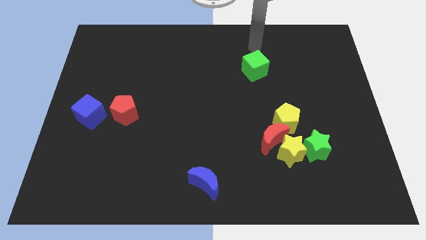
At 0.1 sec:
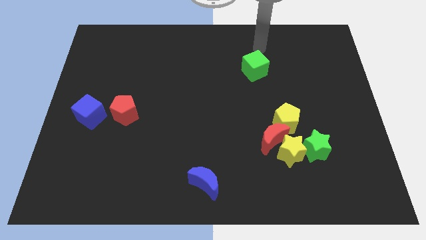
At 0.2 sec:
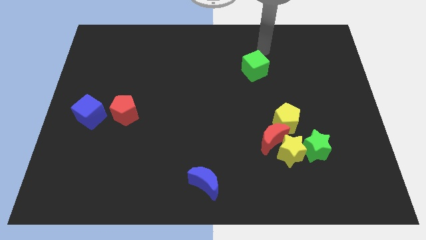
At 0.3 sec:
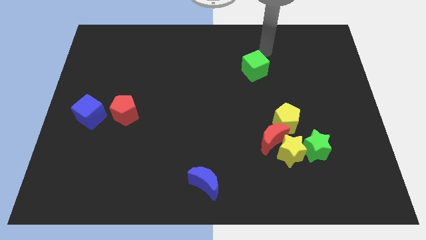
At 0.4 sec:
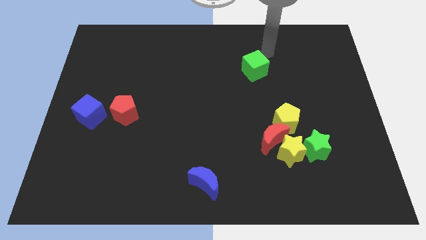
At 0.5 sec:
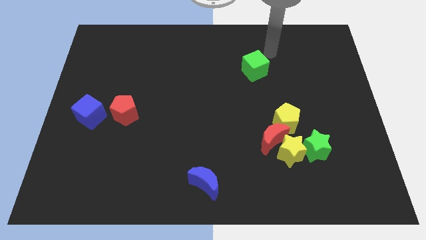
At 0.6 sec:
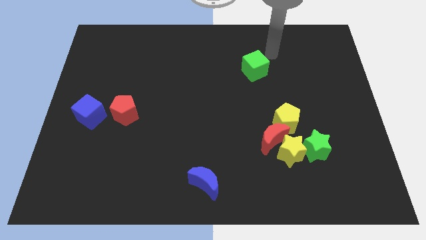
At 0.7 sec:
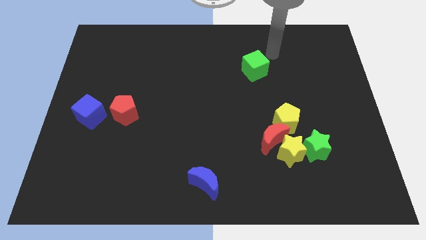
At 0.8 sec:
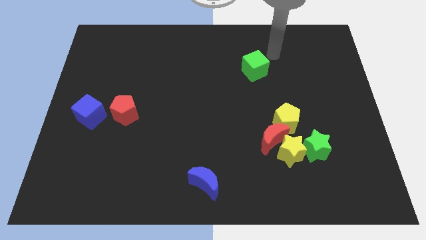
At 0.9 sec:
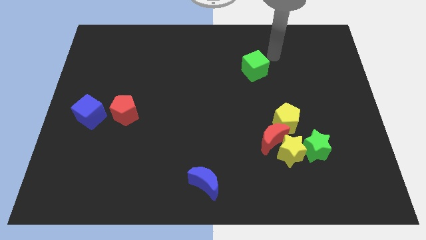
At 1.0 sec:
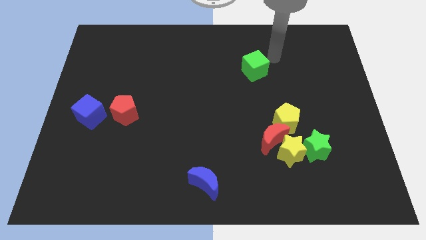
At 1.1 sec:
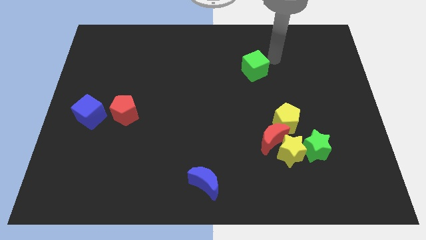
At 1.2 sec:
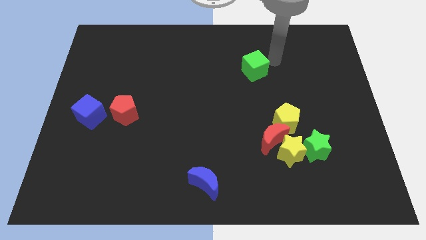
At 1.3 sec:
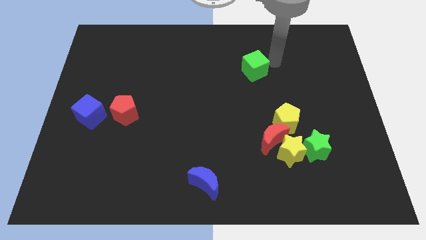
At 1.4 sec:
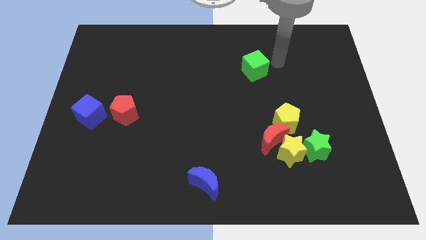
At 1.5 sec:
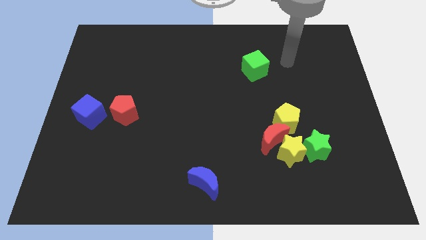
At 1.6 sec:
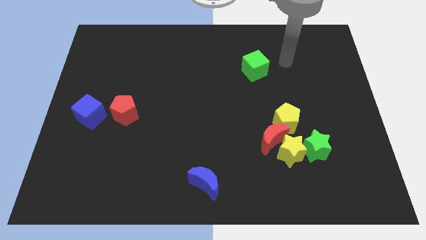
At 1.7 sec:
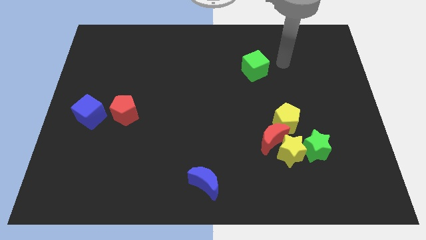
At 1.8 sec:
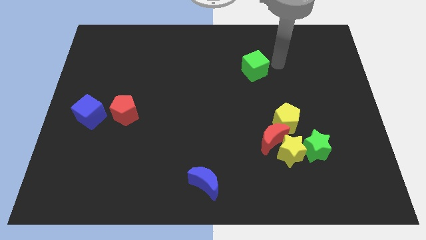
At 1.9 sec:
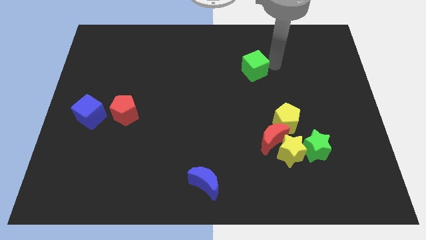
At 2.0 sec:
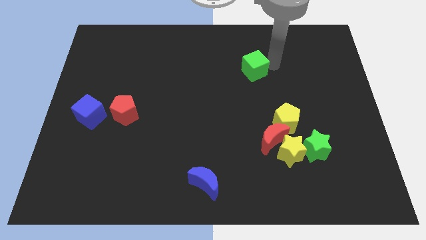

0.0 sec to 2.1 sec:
move your arm towards the green cube

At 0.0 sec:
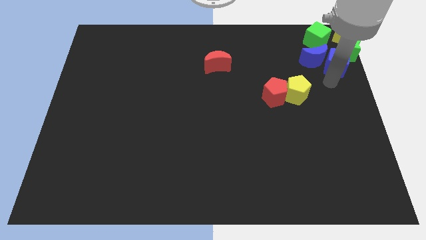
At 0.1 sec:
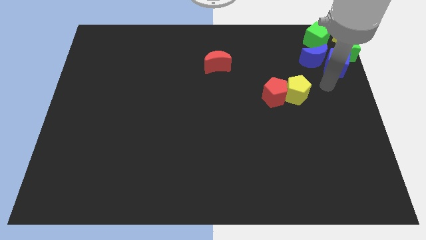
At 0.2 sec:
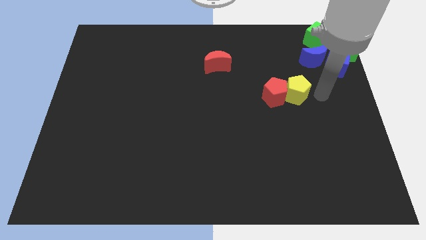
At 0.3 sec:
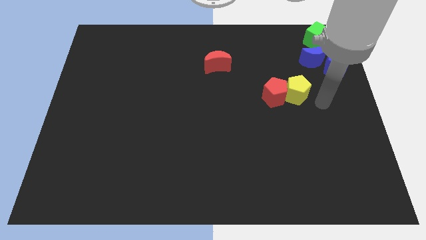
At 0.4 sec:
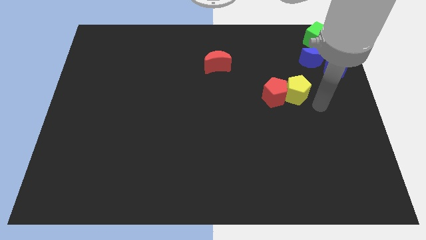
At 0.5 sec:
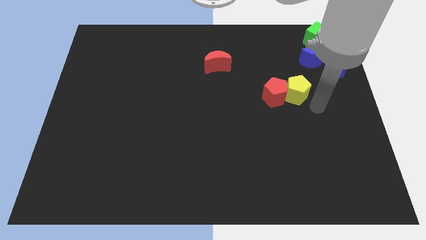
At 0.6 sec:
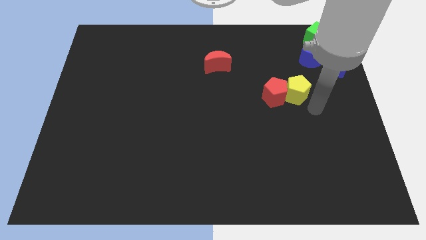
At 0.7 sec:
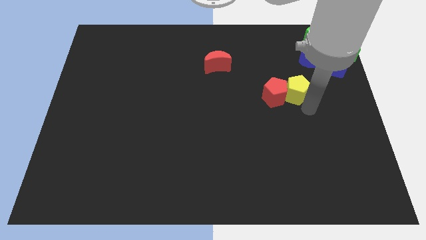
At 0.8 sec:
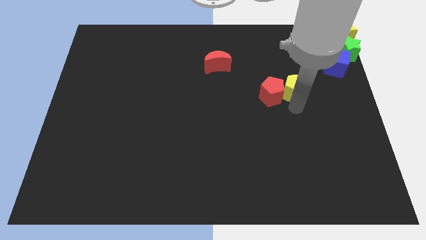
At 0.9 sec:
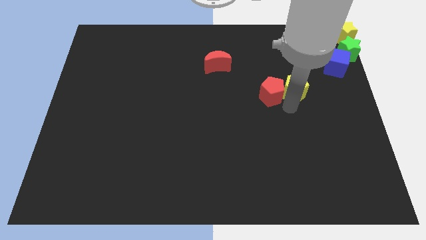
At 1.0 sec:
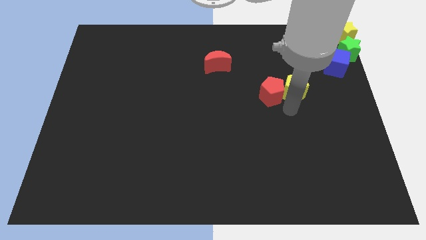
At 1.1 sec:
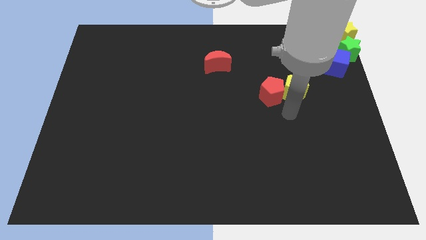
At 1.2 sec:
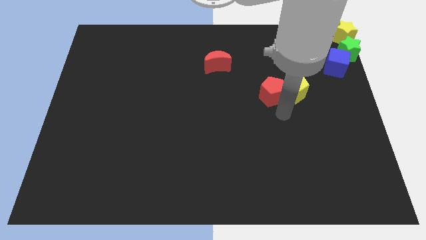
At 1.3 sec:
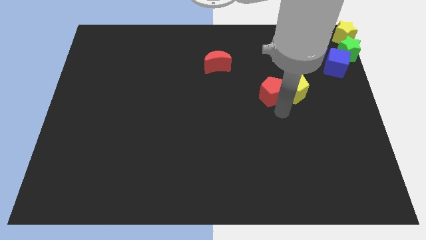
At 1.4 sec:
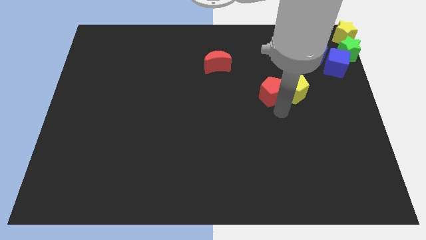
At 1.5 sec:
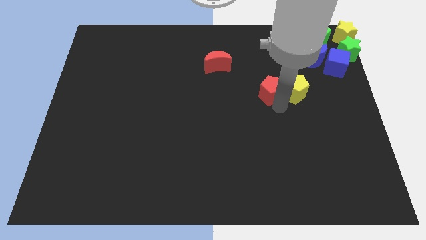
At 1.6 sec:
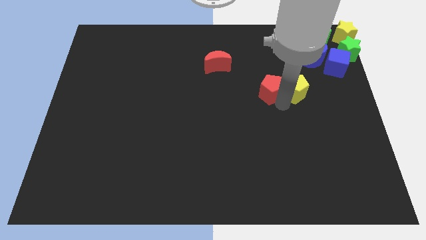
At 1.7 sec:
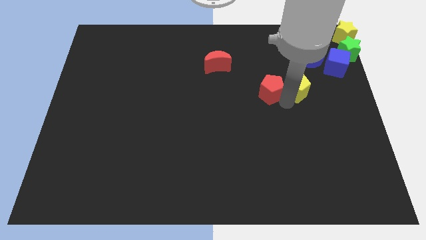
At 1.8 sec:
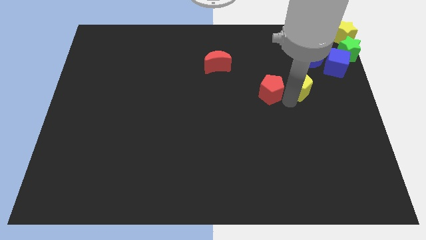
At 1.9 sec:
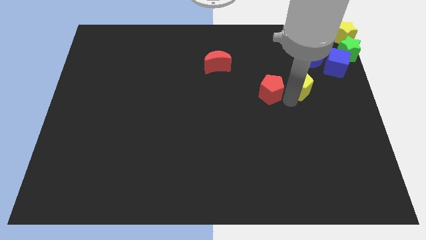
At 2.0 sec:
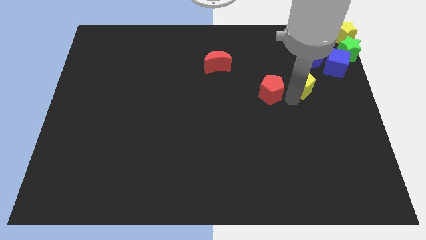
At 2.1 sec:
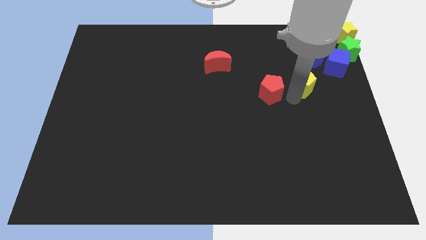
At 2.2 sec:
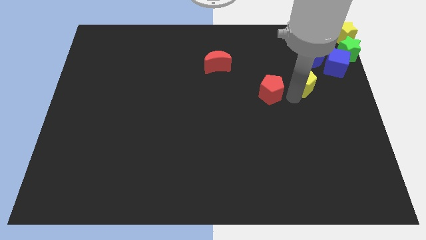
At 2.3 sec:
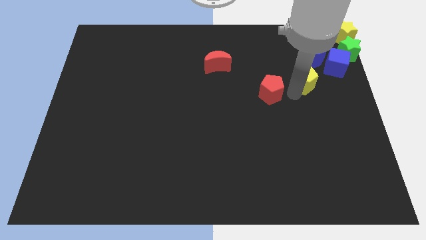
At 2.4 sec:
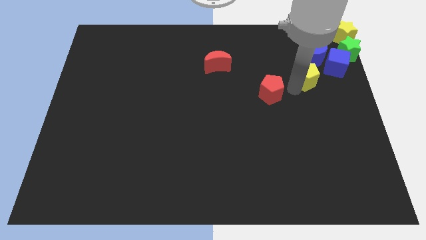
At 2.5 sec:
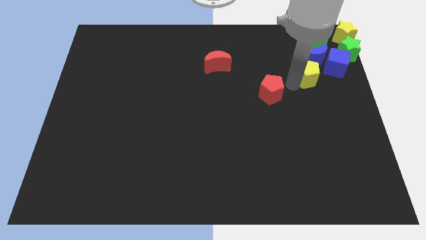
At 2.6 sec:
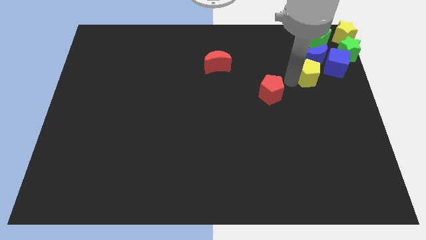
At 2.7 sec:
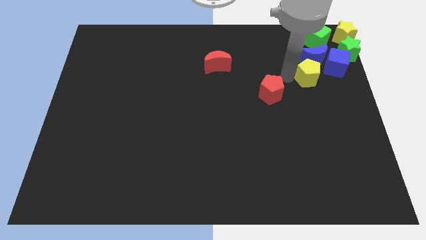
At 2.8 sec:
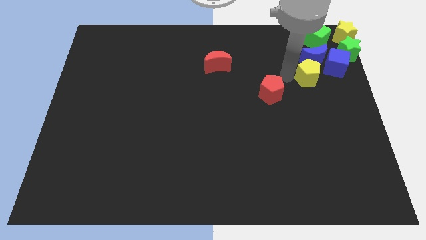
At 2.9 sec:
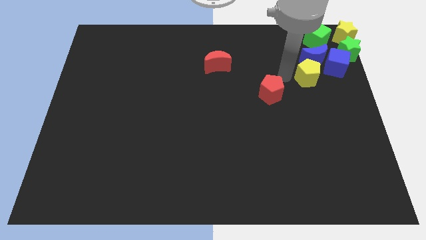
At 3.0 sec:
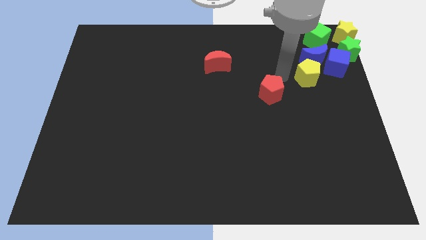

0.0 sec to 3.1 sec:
push yellow pentagon towards the blue crescent

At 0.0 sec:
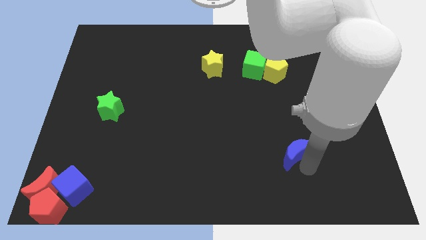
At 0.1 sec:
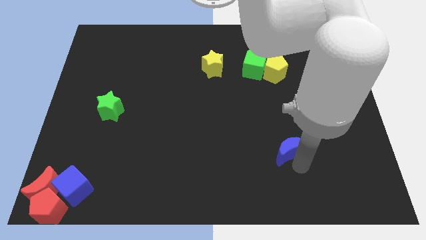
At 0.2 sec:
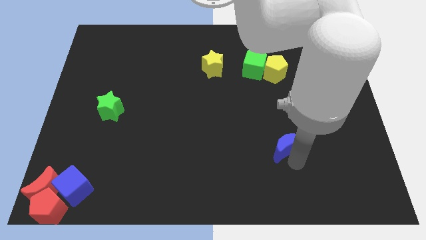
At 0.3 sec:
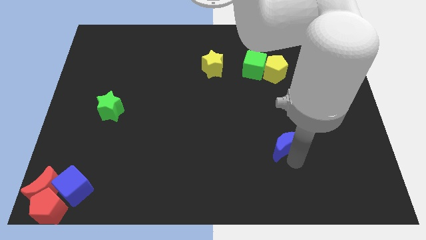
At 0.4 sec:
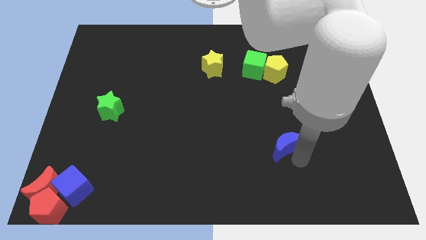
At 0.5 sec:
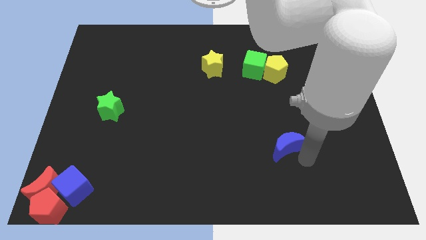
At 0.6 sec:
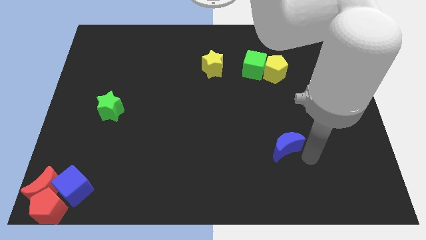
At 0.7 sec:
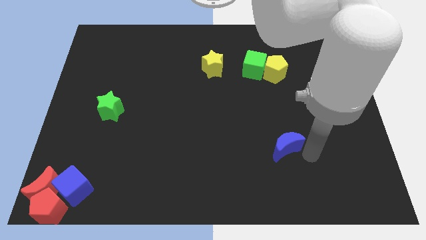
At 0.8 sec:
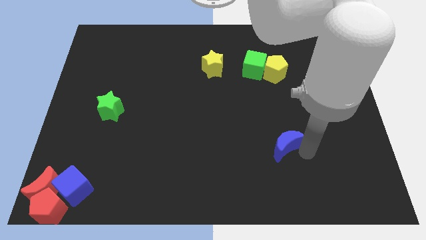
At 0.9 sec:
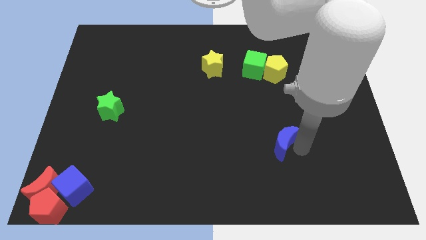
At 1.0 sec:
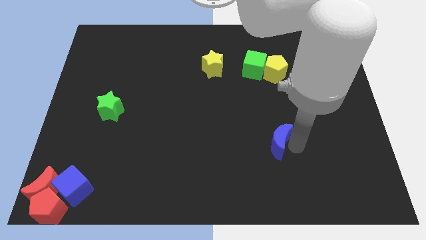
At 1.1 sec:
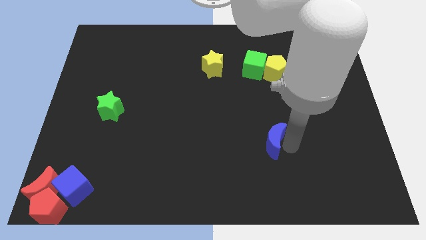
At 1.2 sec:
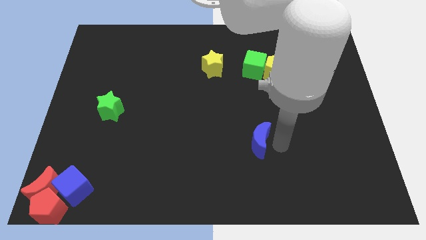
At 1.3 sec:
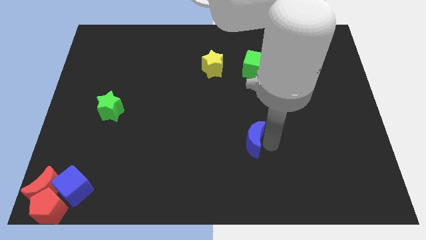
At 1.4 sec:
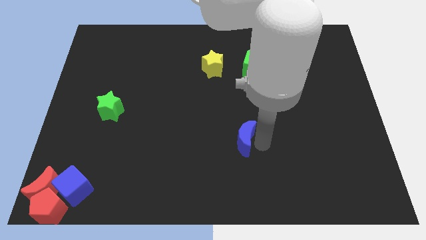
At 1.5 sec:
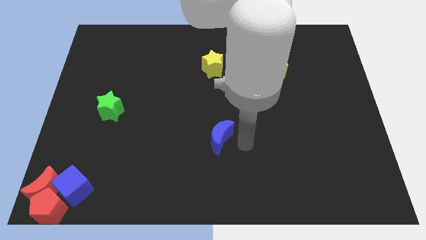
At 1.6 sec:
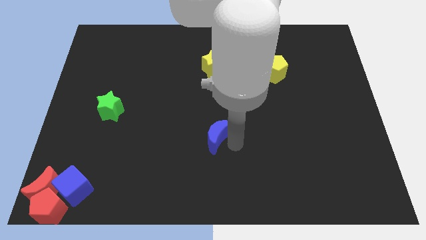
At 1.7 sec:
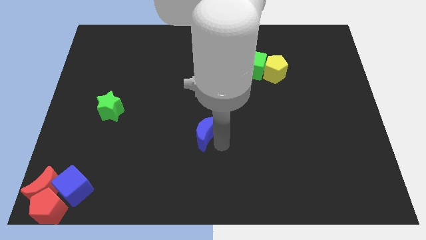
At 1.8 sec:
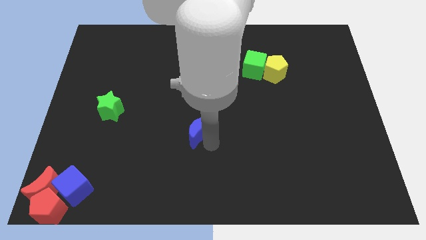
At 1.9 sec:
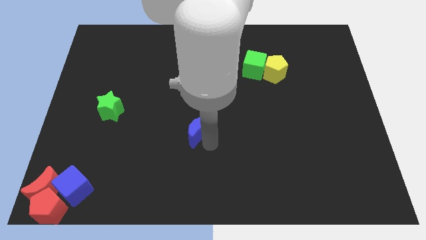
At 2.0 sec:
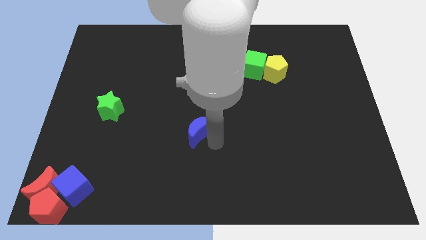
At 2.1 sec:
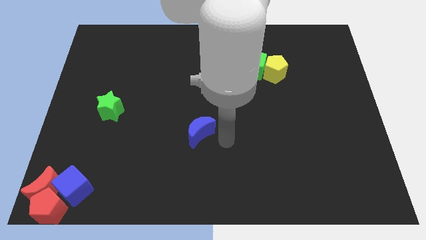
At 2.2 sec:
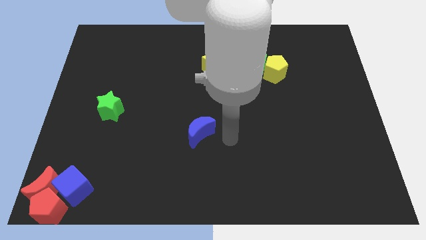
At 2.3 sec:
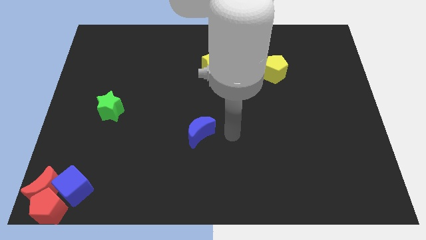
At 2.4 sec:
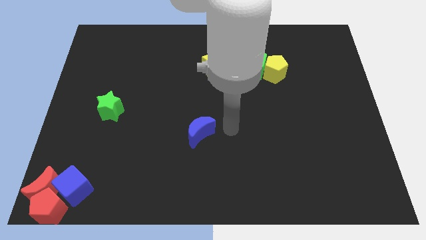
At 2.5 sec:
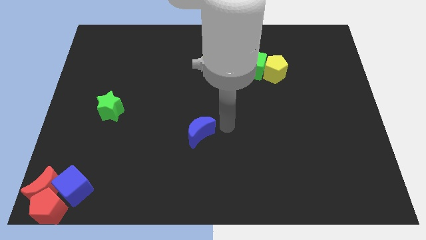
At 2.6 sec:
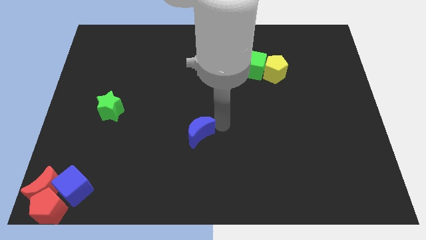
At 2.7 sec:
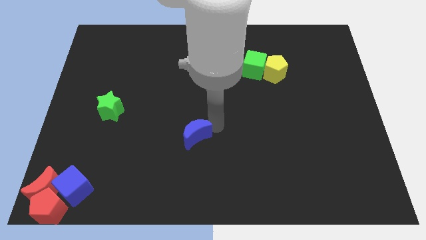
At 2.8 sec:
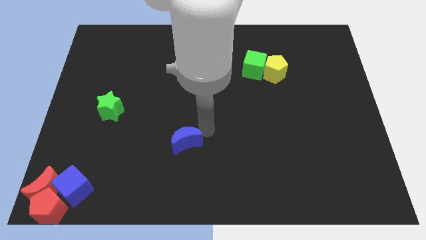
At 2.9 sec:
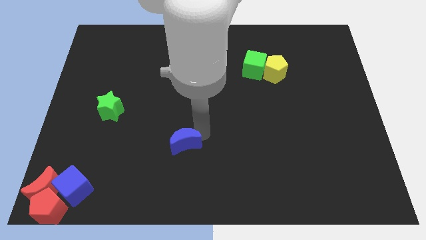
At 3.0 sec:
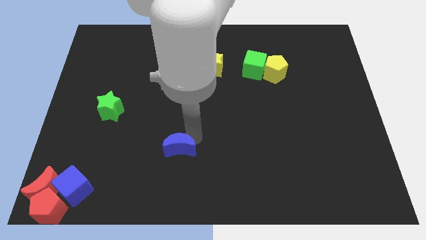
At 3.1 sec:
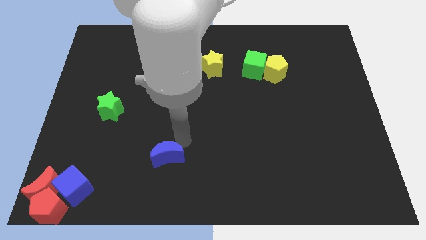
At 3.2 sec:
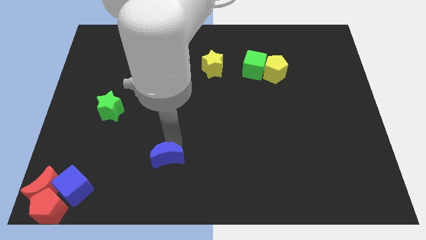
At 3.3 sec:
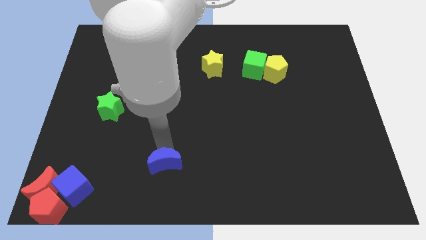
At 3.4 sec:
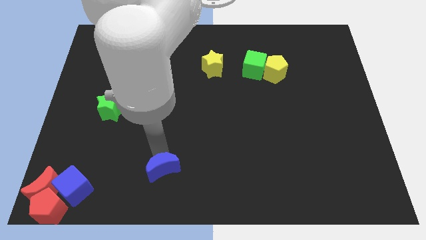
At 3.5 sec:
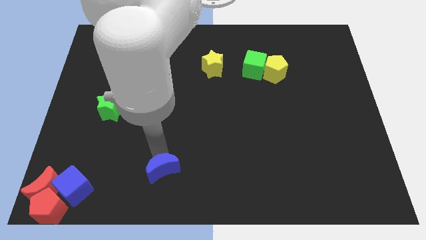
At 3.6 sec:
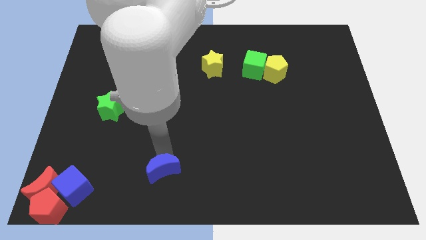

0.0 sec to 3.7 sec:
move the blue moon to the bottom diagonal to blue cube

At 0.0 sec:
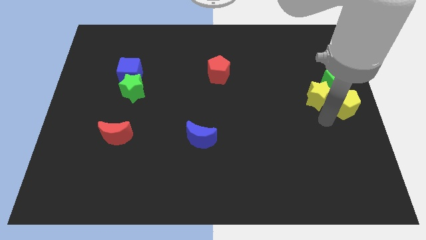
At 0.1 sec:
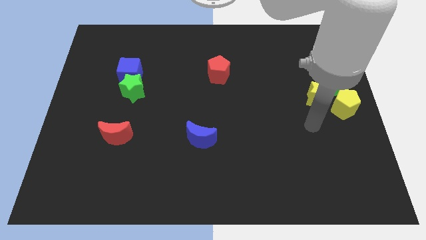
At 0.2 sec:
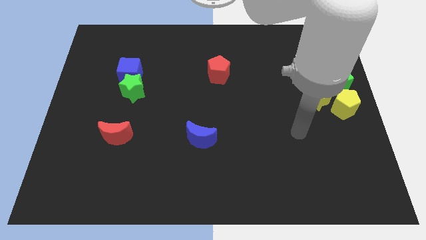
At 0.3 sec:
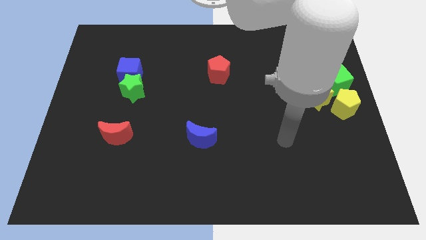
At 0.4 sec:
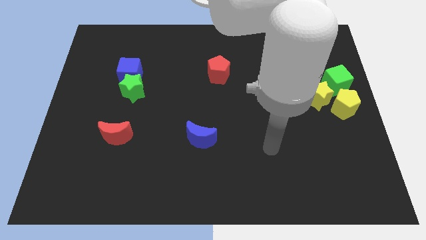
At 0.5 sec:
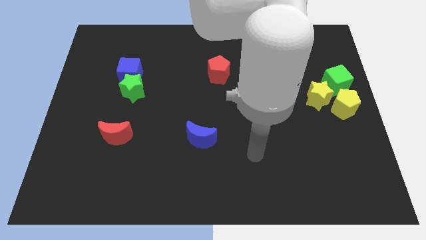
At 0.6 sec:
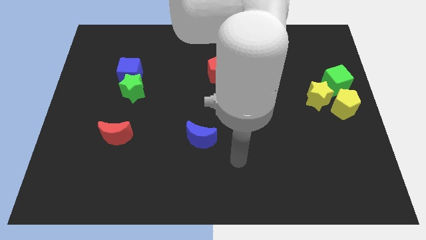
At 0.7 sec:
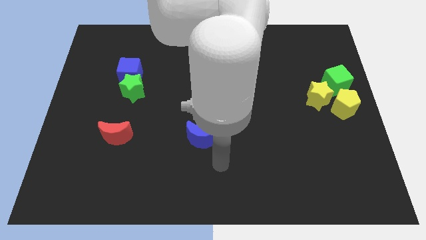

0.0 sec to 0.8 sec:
move the arm away from the yellow pentagon
